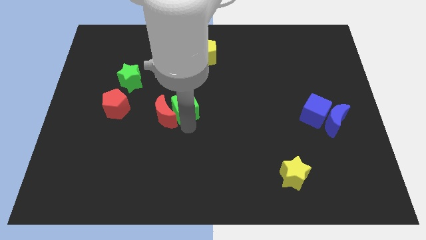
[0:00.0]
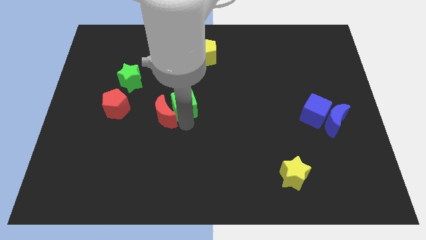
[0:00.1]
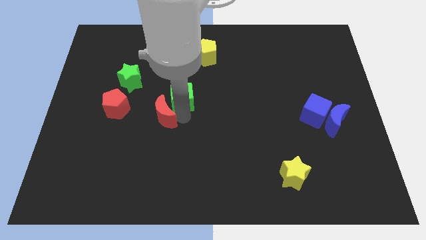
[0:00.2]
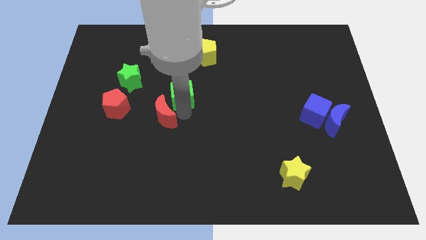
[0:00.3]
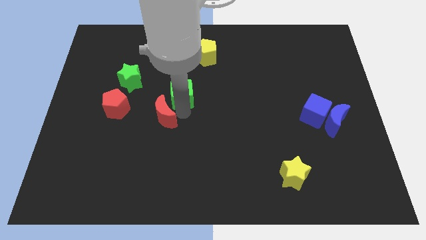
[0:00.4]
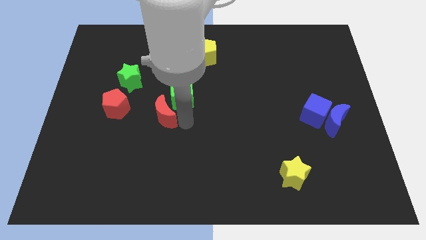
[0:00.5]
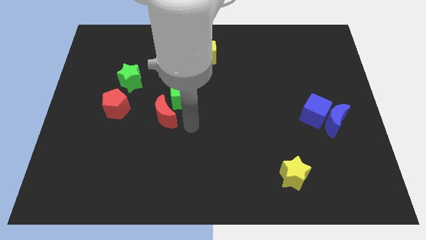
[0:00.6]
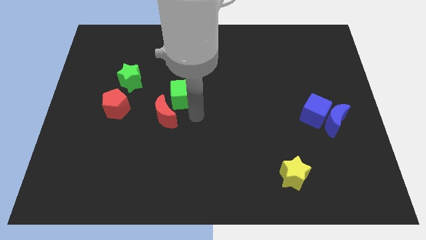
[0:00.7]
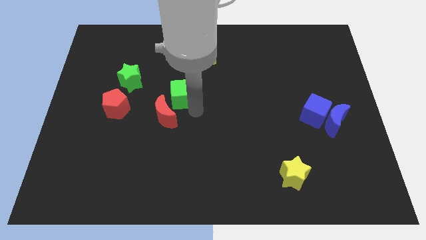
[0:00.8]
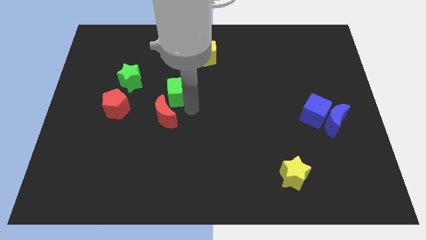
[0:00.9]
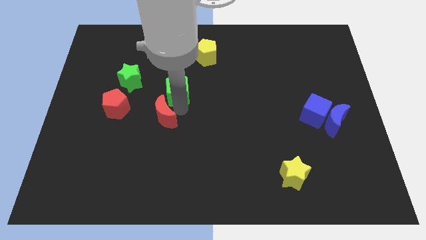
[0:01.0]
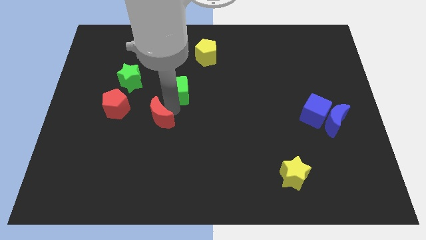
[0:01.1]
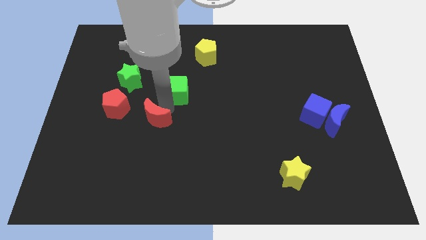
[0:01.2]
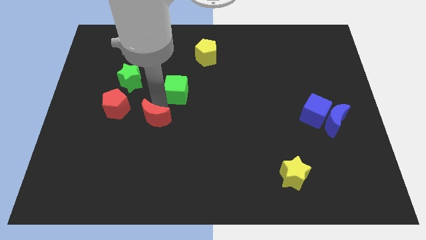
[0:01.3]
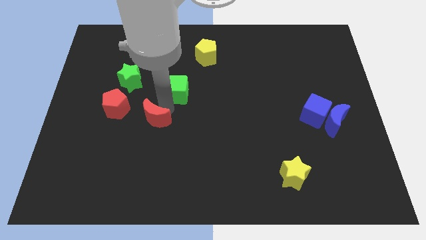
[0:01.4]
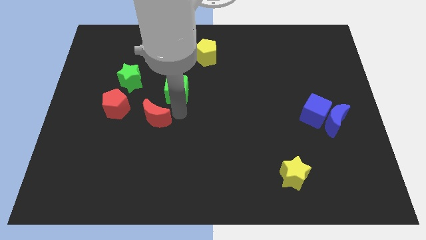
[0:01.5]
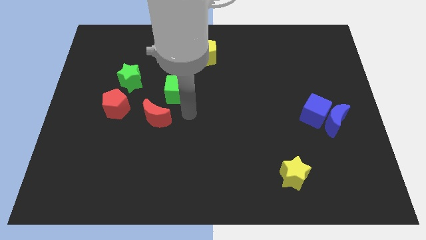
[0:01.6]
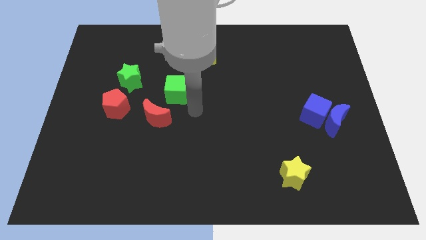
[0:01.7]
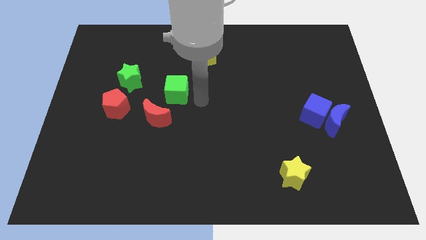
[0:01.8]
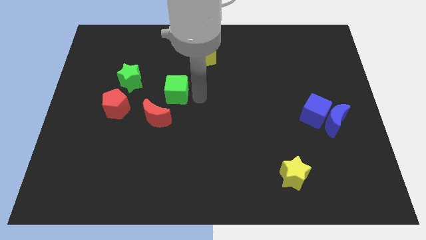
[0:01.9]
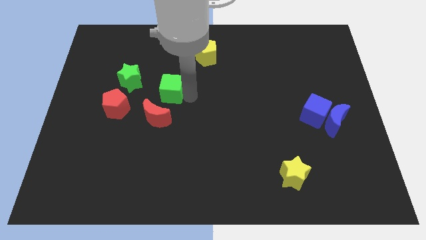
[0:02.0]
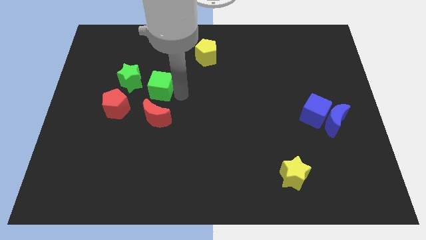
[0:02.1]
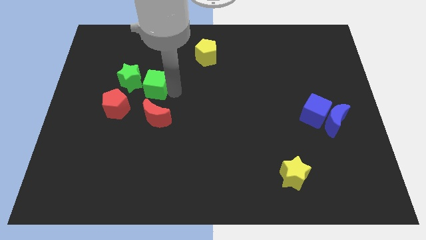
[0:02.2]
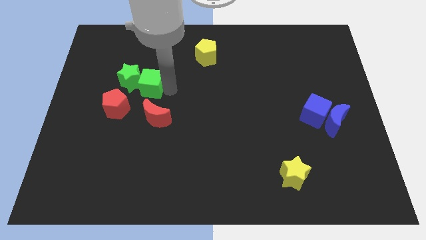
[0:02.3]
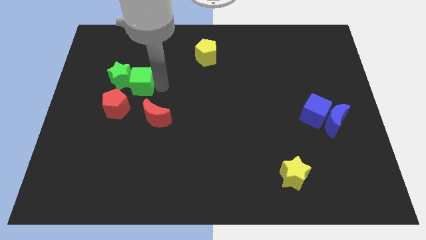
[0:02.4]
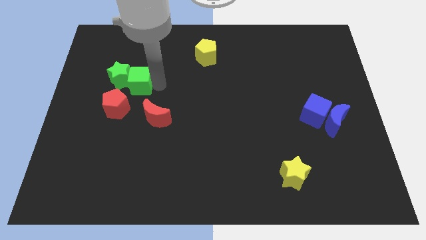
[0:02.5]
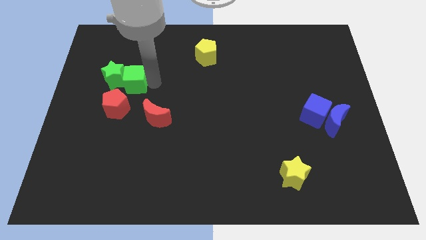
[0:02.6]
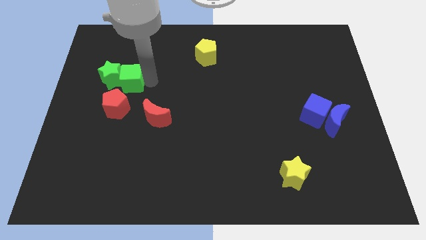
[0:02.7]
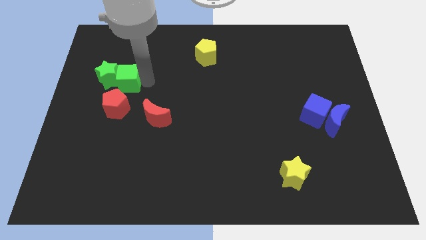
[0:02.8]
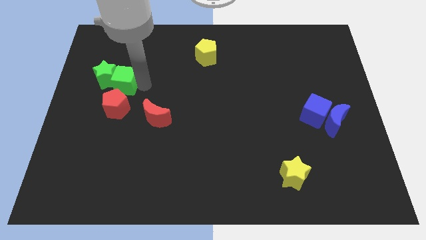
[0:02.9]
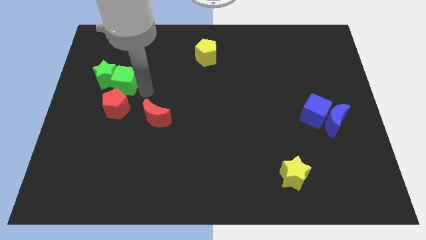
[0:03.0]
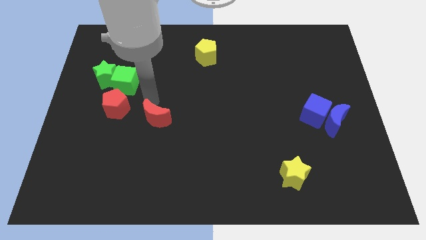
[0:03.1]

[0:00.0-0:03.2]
separate the green cube towards green star at the right

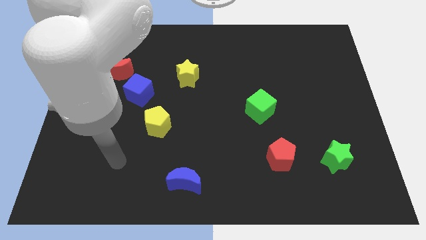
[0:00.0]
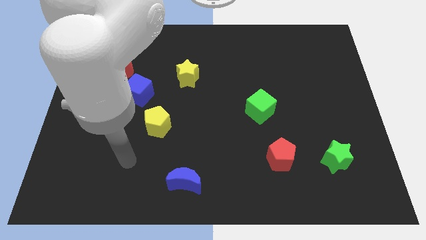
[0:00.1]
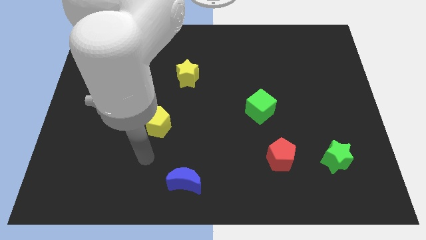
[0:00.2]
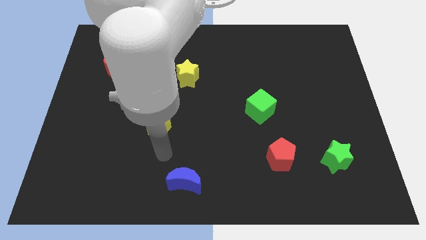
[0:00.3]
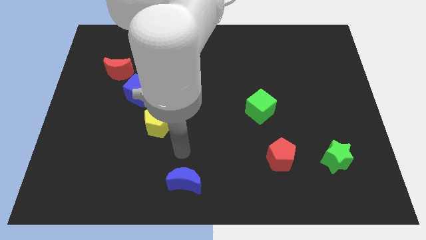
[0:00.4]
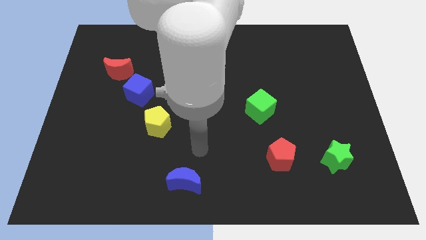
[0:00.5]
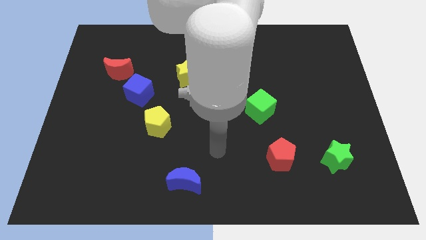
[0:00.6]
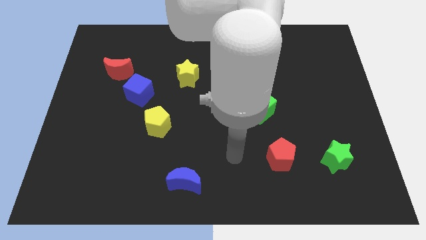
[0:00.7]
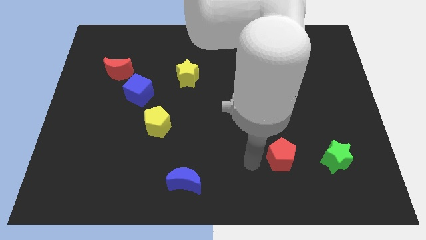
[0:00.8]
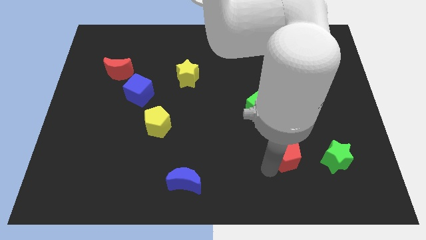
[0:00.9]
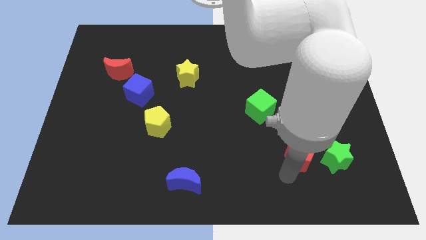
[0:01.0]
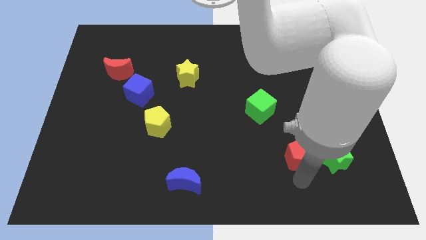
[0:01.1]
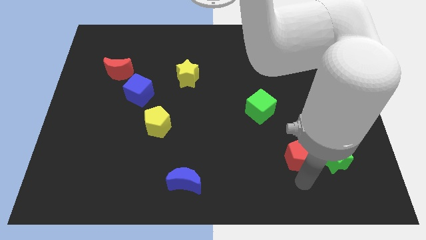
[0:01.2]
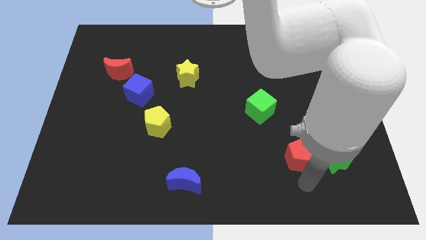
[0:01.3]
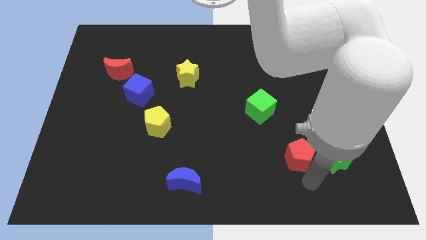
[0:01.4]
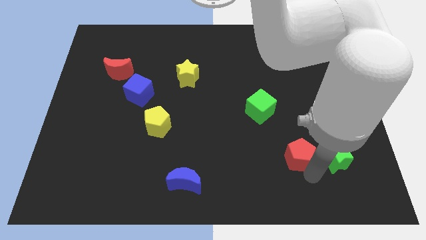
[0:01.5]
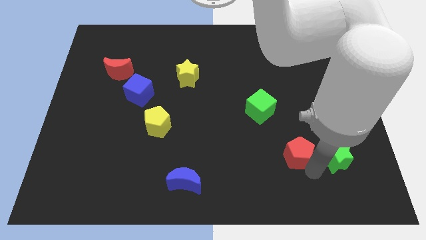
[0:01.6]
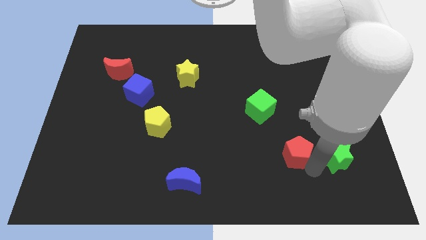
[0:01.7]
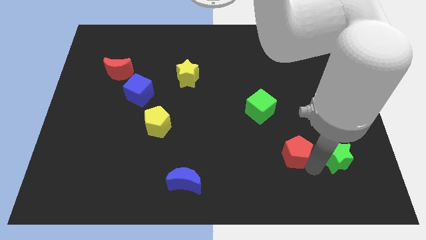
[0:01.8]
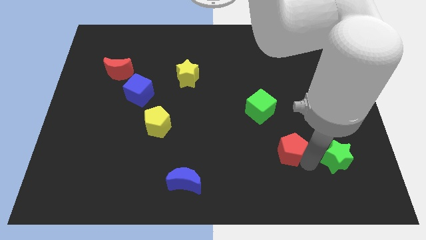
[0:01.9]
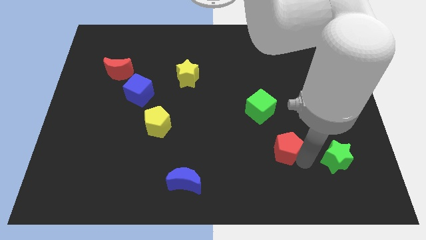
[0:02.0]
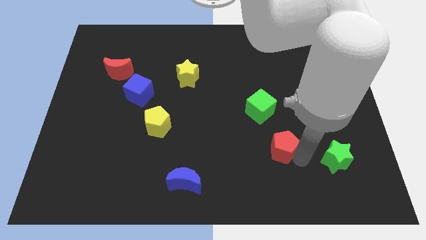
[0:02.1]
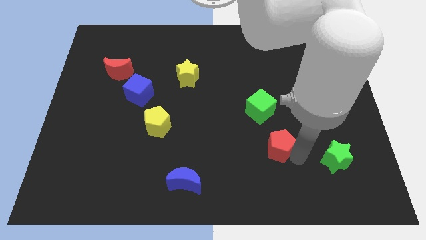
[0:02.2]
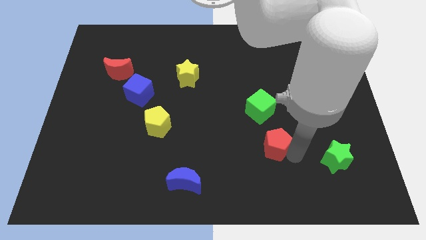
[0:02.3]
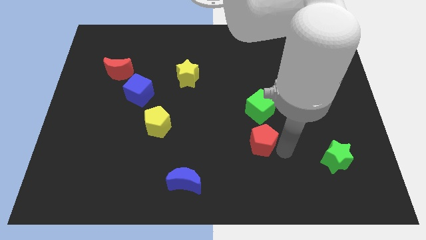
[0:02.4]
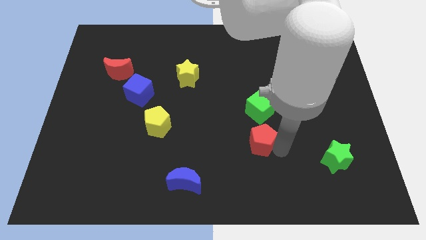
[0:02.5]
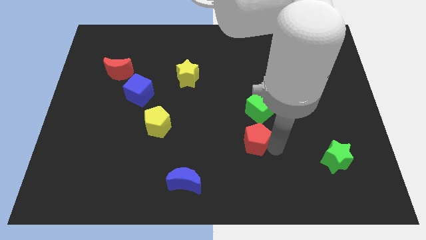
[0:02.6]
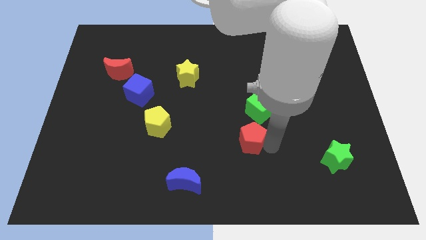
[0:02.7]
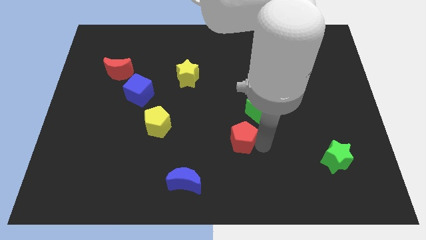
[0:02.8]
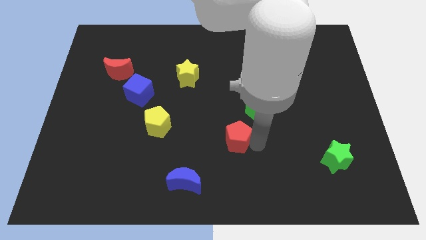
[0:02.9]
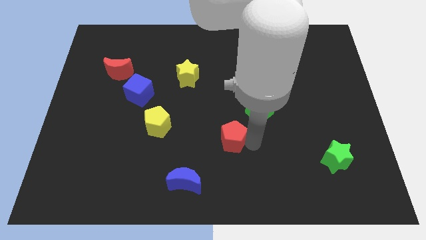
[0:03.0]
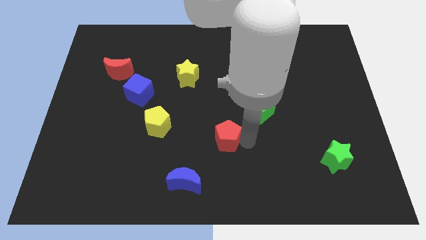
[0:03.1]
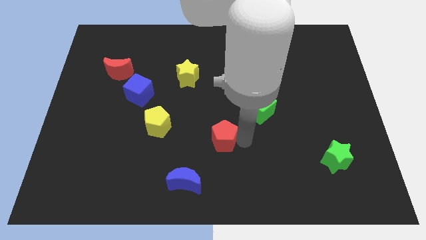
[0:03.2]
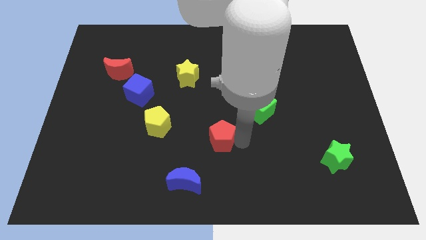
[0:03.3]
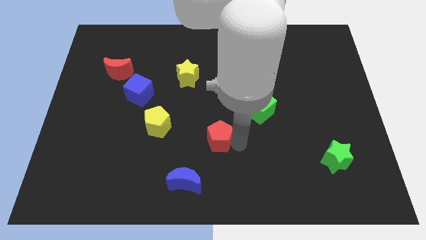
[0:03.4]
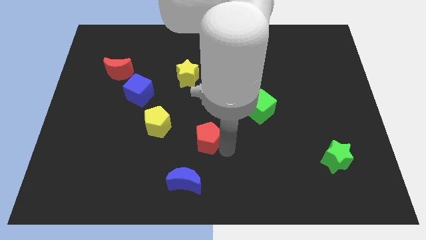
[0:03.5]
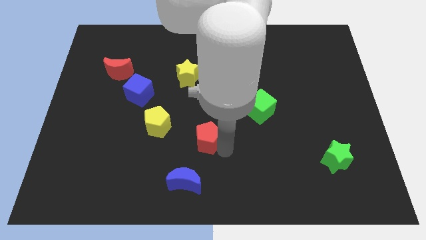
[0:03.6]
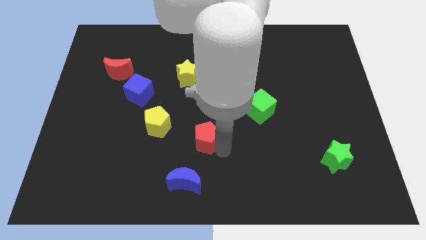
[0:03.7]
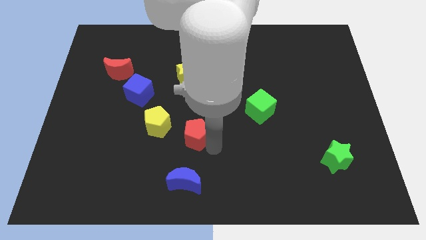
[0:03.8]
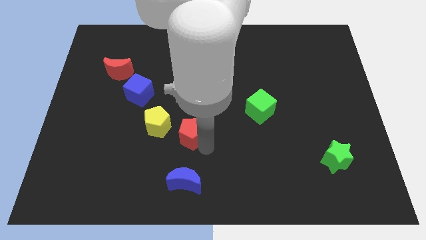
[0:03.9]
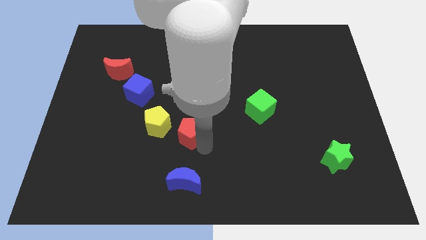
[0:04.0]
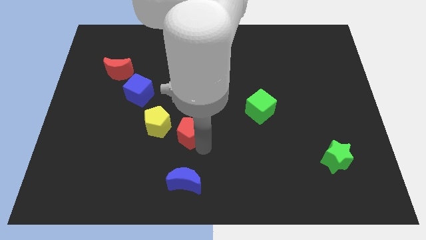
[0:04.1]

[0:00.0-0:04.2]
push the red pentagon slightly to the left

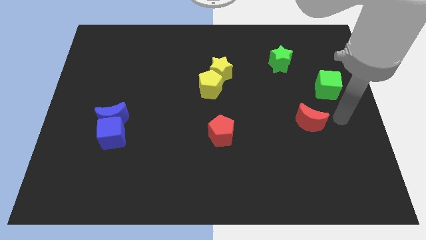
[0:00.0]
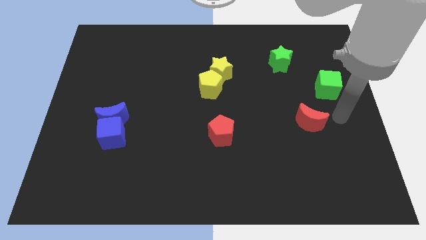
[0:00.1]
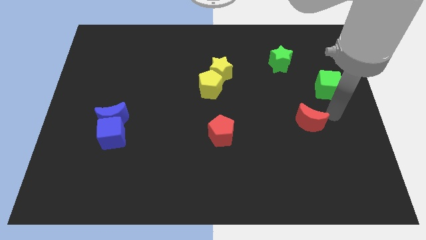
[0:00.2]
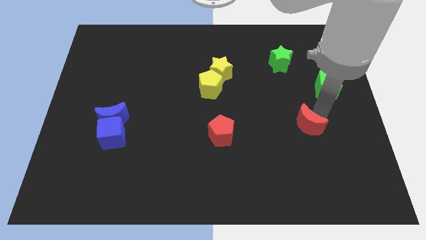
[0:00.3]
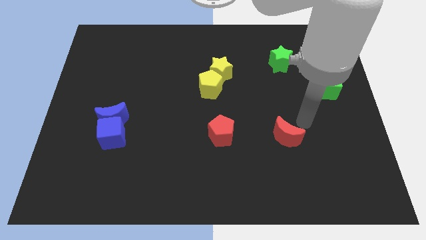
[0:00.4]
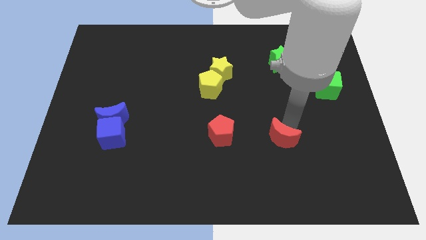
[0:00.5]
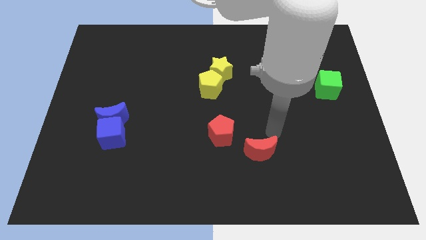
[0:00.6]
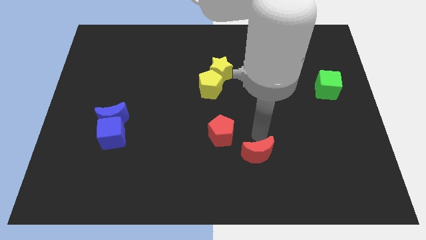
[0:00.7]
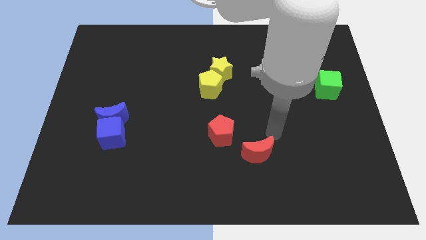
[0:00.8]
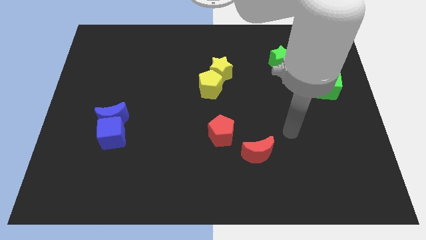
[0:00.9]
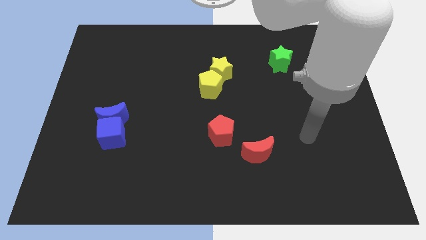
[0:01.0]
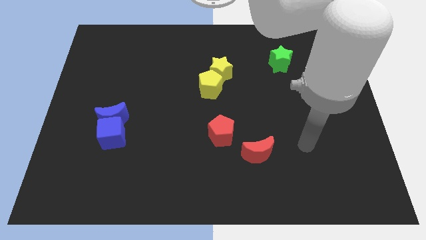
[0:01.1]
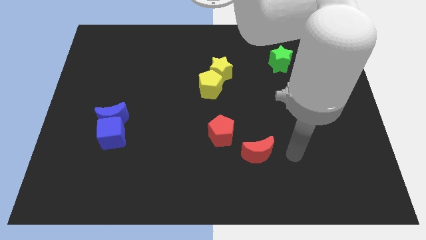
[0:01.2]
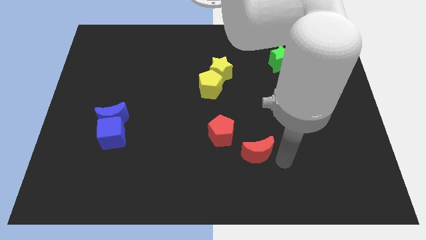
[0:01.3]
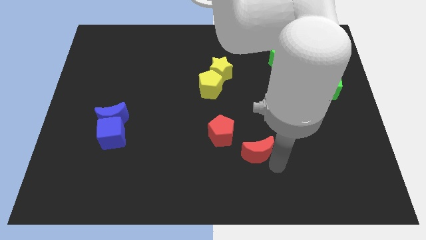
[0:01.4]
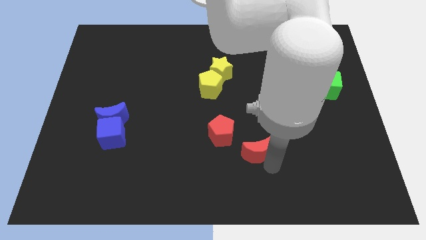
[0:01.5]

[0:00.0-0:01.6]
push red crescent to the bottom right side of the red pentagon
